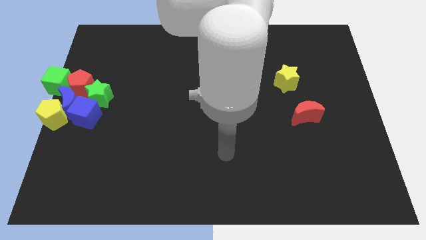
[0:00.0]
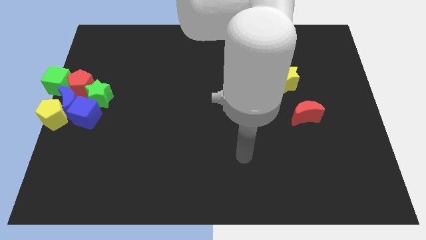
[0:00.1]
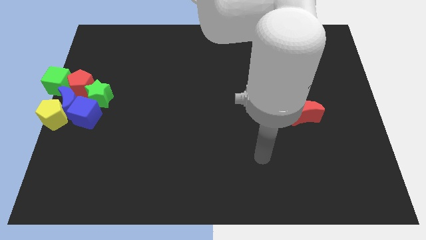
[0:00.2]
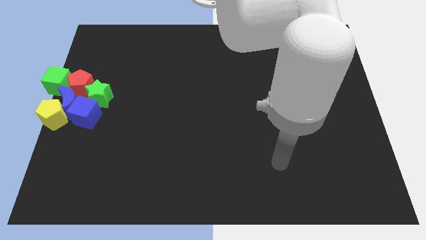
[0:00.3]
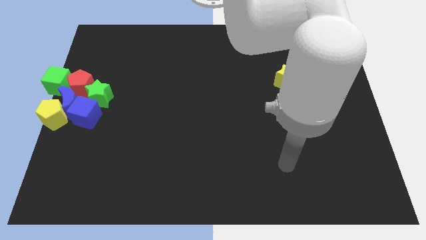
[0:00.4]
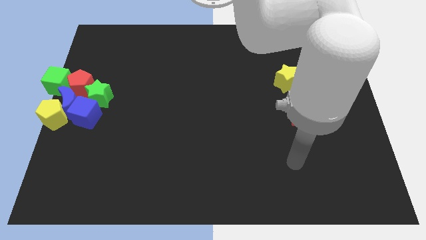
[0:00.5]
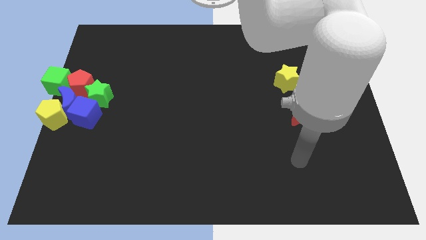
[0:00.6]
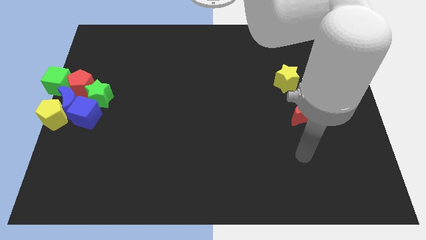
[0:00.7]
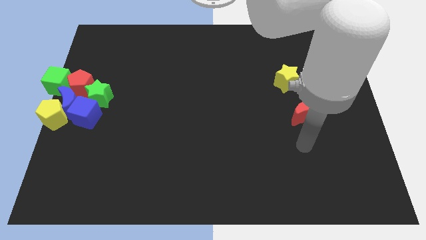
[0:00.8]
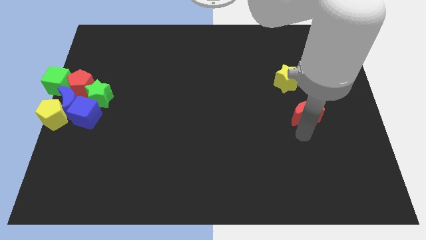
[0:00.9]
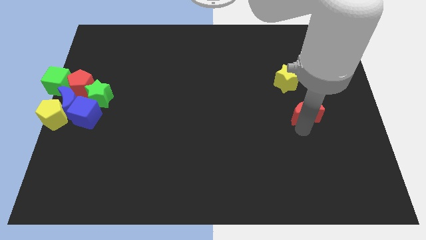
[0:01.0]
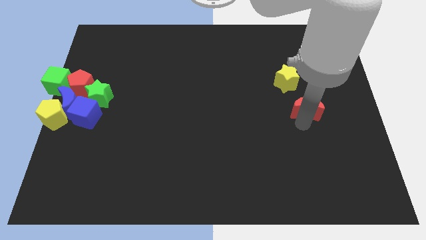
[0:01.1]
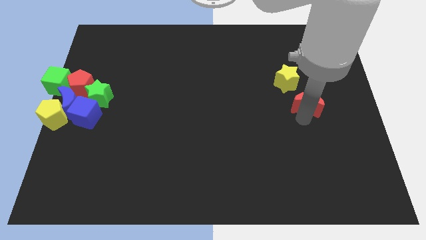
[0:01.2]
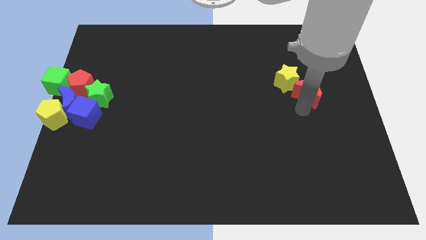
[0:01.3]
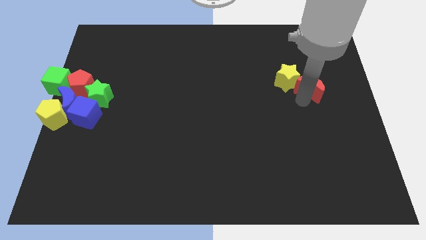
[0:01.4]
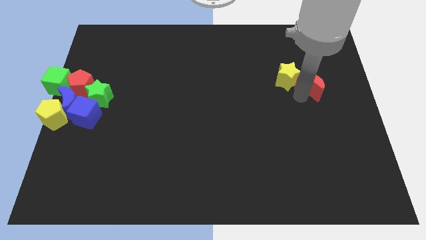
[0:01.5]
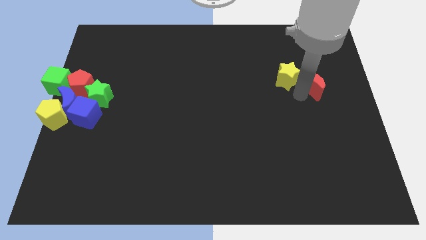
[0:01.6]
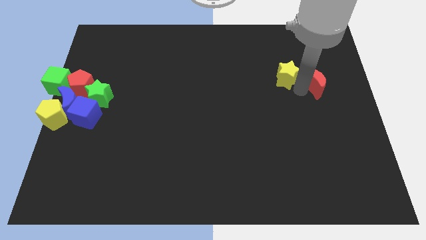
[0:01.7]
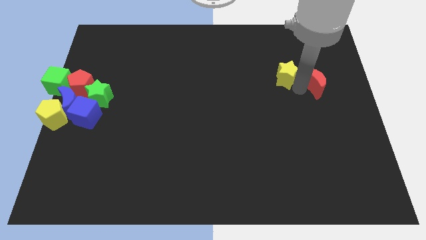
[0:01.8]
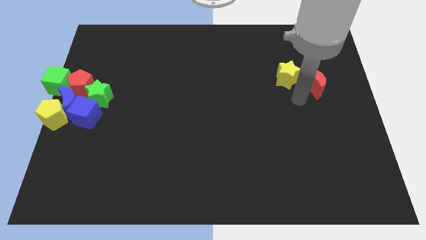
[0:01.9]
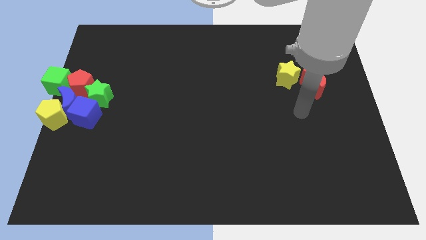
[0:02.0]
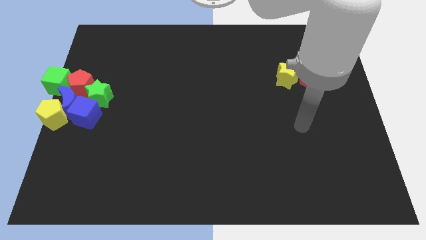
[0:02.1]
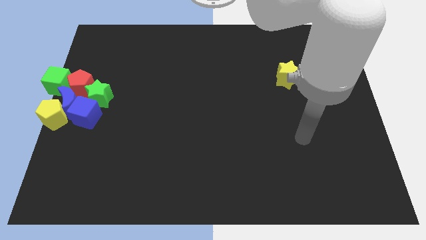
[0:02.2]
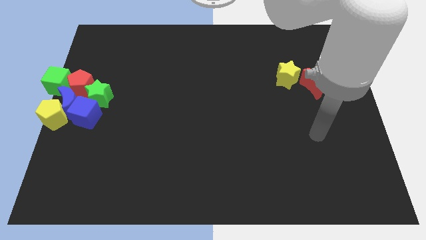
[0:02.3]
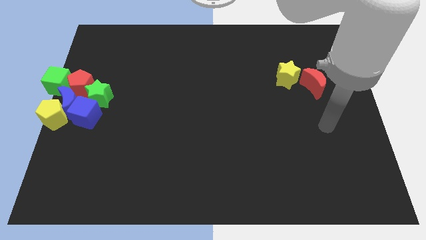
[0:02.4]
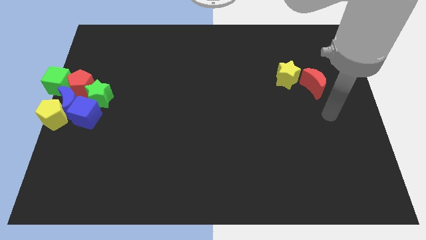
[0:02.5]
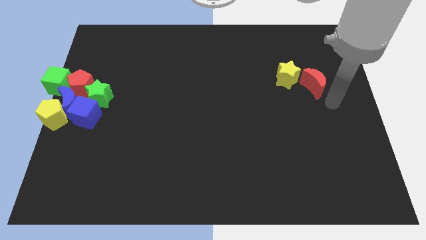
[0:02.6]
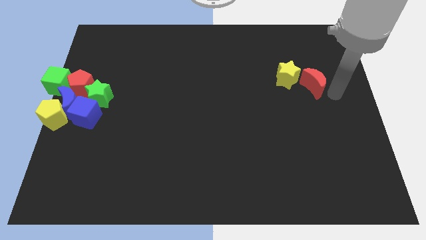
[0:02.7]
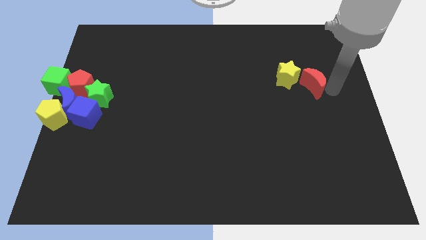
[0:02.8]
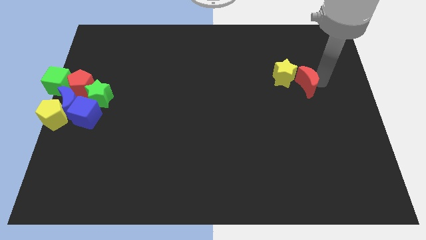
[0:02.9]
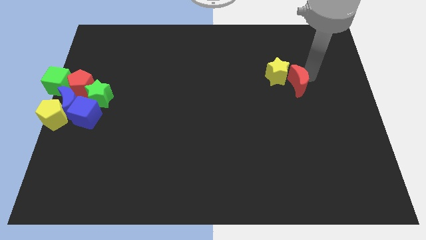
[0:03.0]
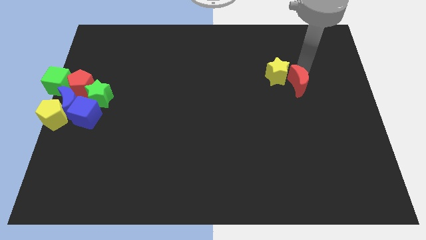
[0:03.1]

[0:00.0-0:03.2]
push the red crescent into the yellow star

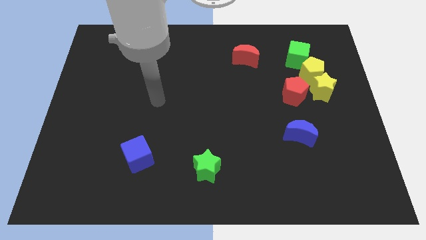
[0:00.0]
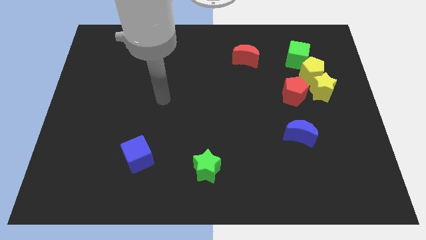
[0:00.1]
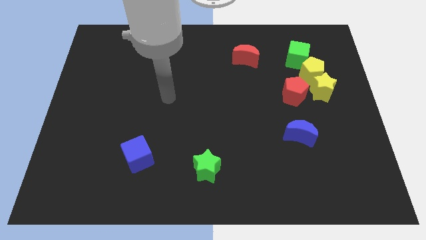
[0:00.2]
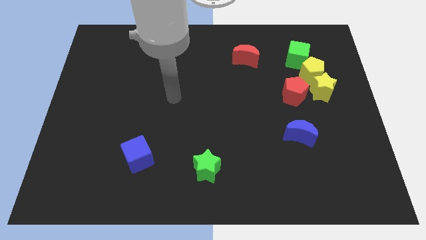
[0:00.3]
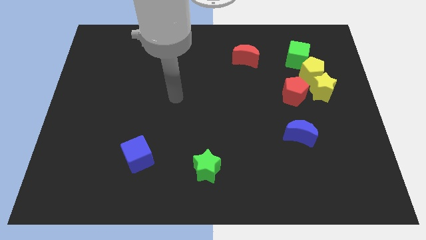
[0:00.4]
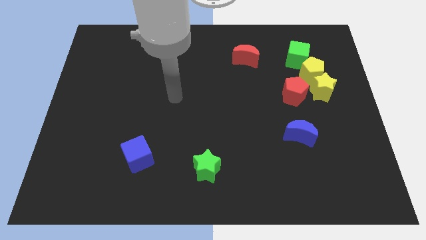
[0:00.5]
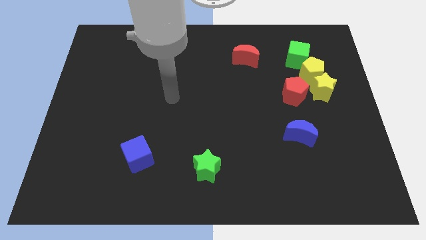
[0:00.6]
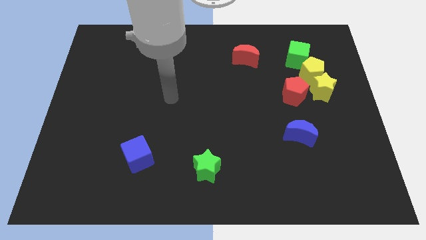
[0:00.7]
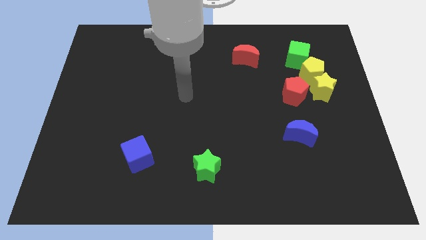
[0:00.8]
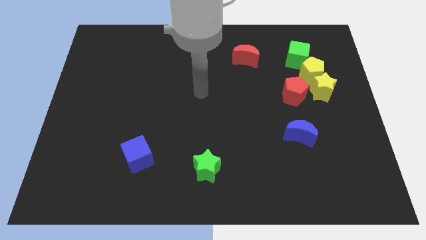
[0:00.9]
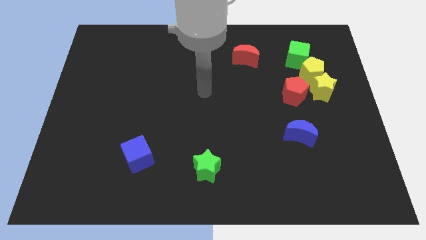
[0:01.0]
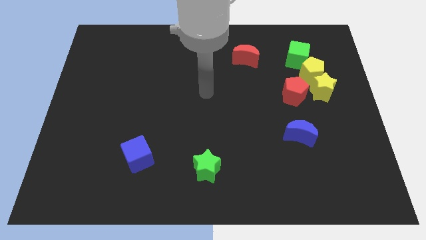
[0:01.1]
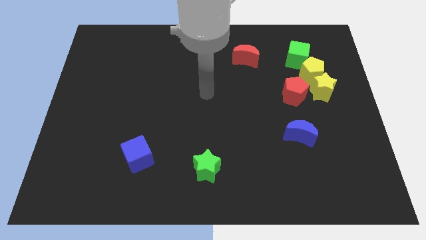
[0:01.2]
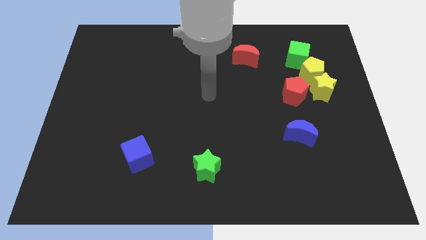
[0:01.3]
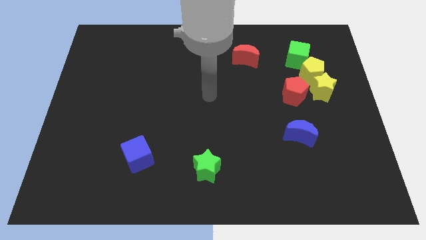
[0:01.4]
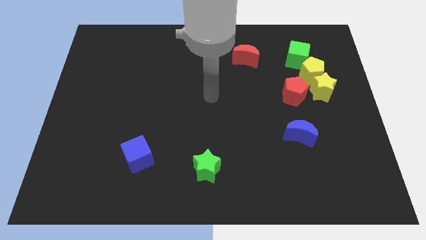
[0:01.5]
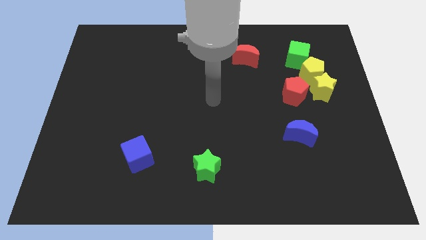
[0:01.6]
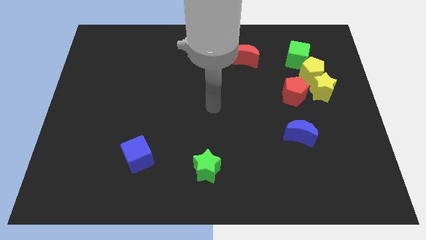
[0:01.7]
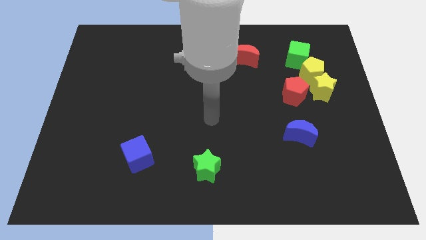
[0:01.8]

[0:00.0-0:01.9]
point the arm at the center of the board

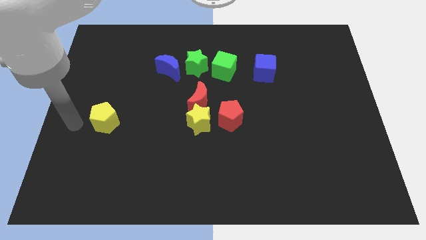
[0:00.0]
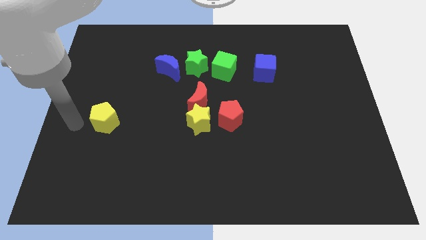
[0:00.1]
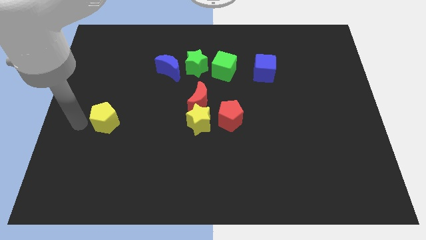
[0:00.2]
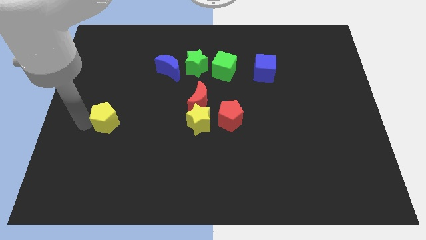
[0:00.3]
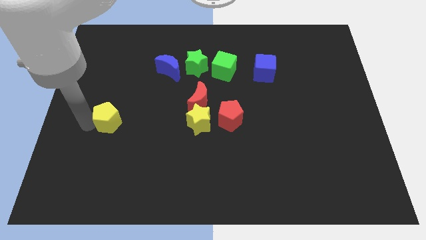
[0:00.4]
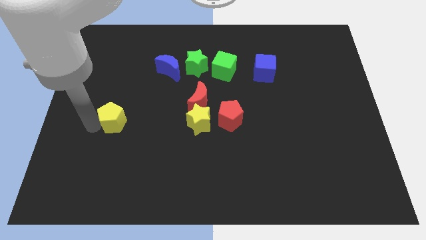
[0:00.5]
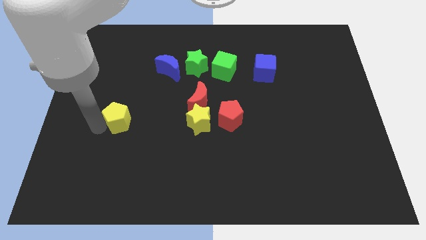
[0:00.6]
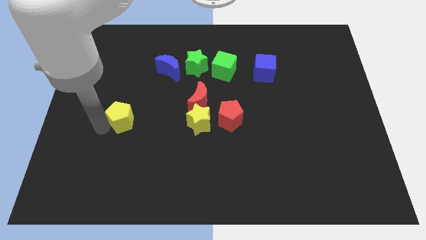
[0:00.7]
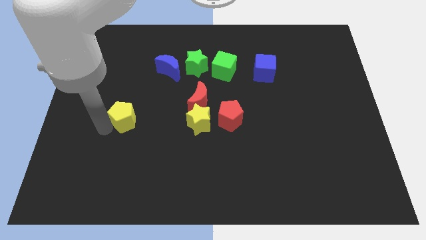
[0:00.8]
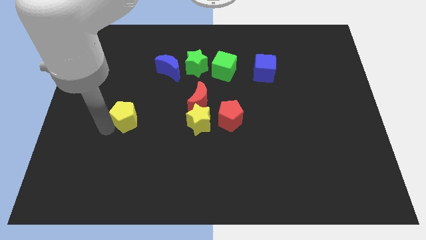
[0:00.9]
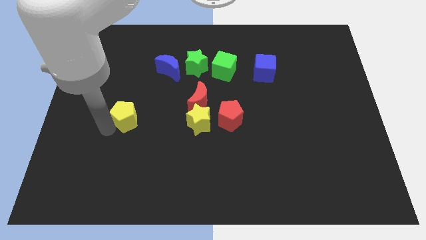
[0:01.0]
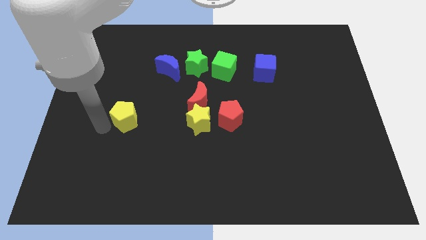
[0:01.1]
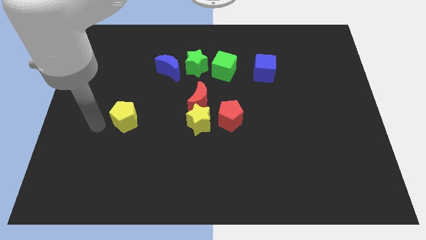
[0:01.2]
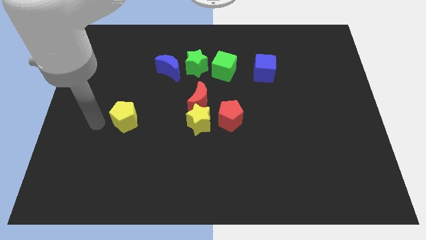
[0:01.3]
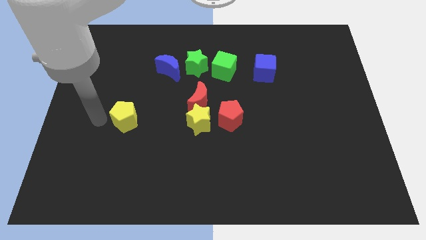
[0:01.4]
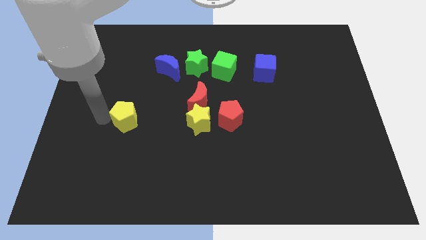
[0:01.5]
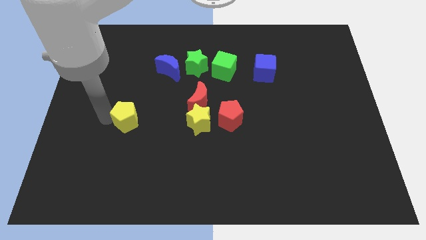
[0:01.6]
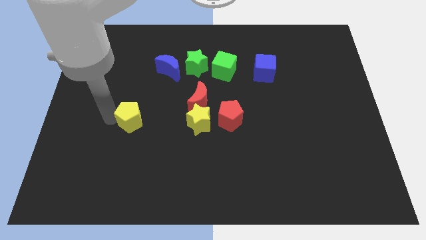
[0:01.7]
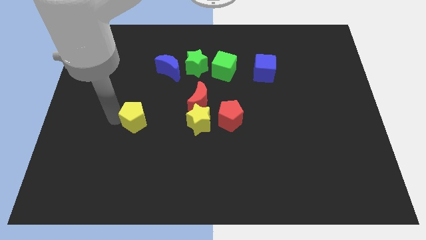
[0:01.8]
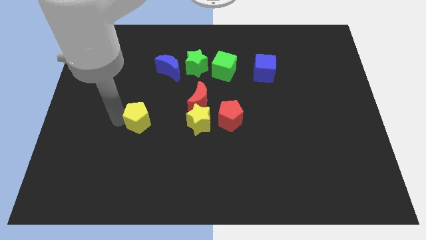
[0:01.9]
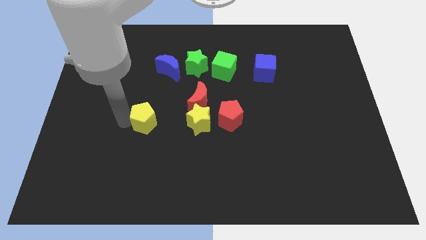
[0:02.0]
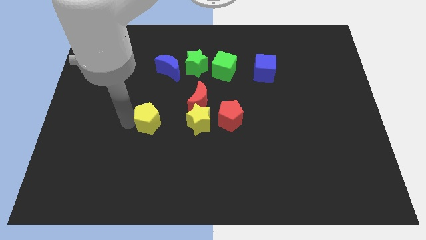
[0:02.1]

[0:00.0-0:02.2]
move the yellow pentagon to the right

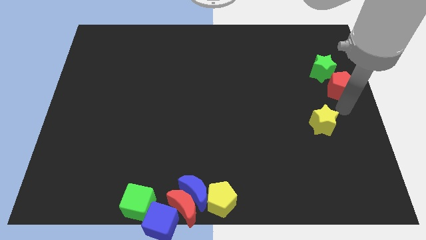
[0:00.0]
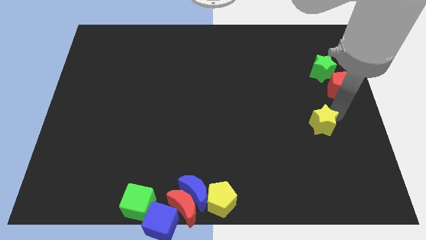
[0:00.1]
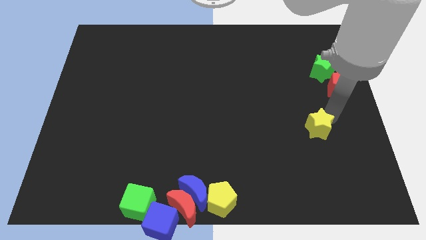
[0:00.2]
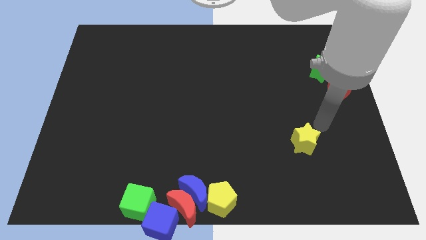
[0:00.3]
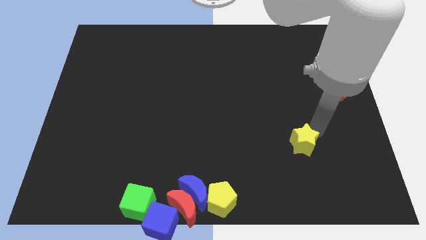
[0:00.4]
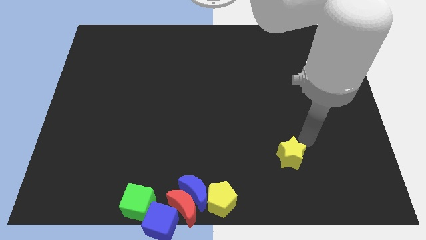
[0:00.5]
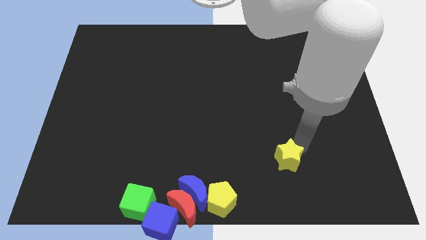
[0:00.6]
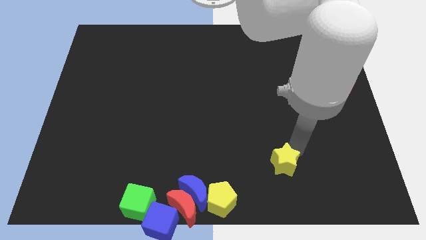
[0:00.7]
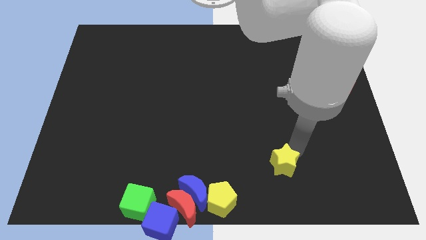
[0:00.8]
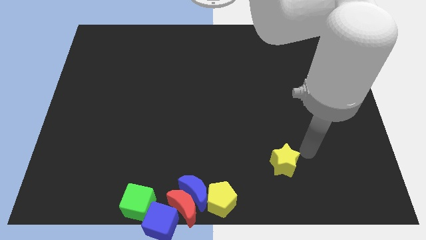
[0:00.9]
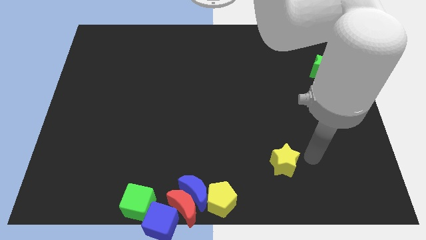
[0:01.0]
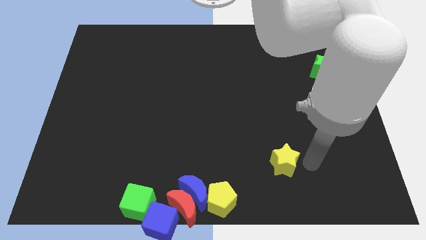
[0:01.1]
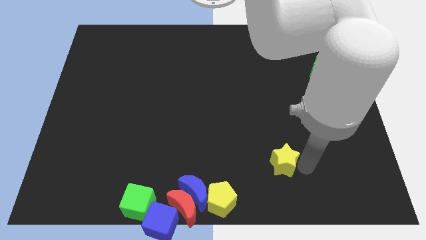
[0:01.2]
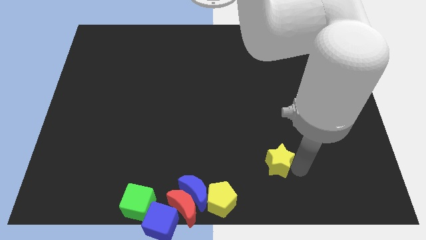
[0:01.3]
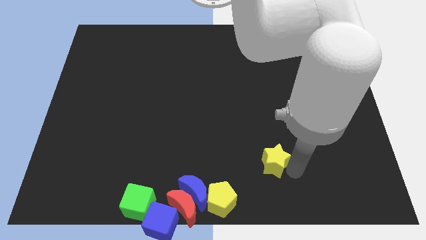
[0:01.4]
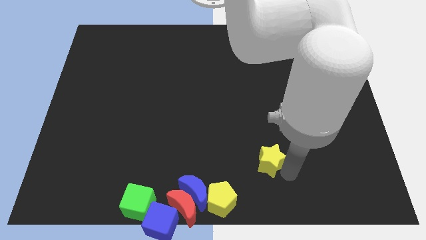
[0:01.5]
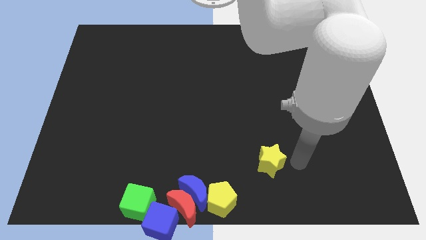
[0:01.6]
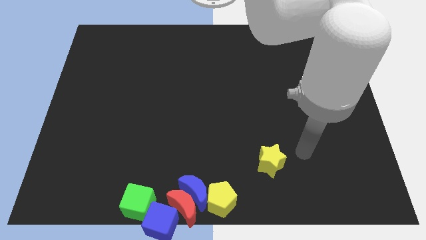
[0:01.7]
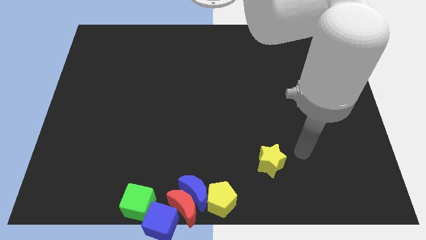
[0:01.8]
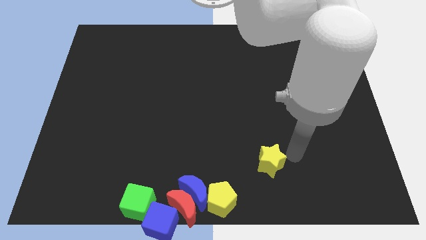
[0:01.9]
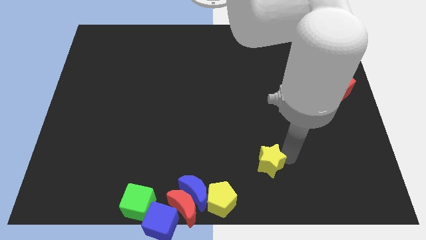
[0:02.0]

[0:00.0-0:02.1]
push the yellow star towards the bottom
